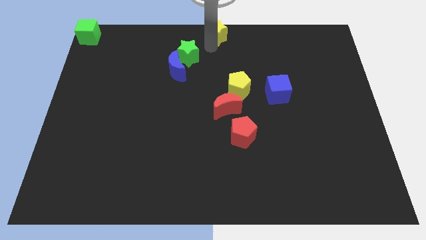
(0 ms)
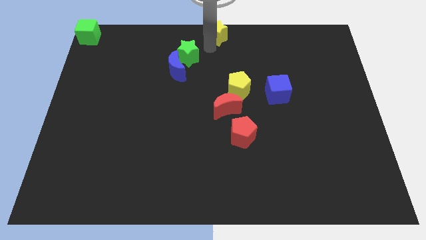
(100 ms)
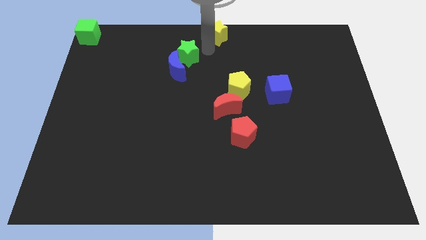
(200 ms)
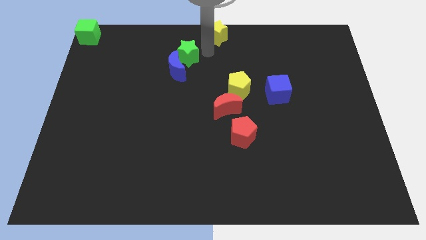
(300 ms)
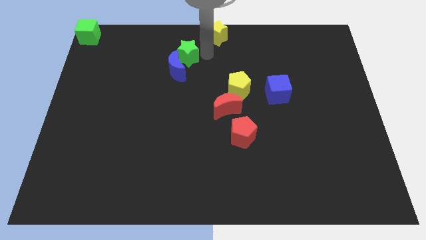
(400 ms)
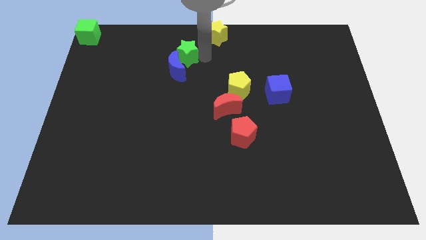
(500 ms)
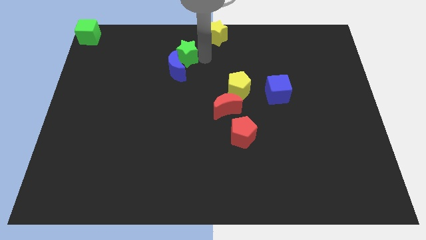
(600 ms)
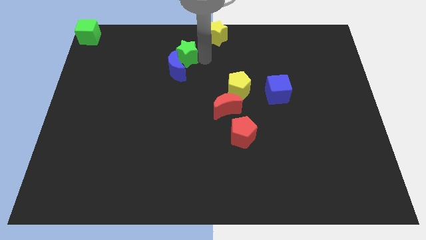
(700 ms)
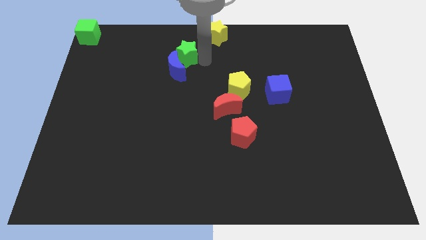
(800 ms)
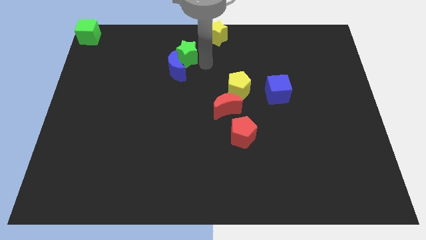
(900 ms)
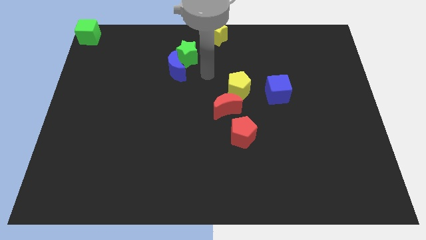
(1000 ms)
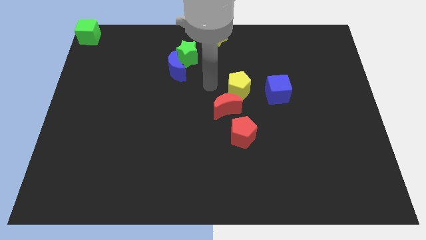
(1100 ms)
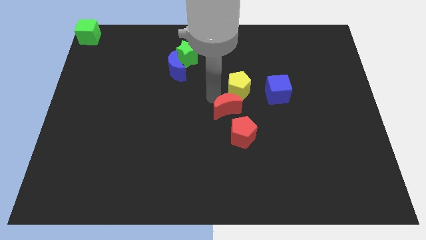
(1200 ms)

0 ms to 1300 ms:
slightly touch right to the green star

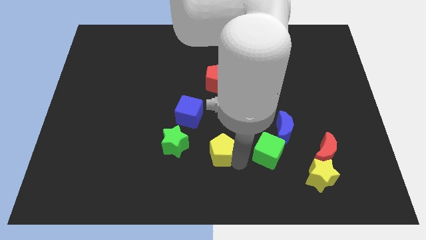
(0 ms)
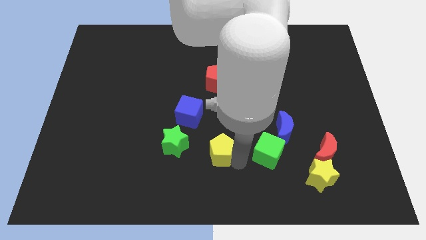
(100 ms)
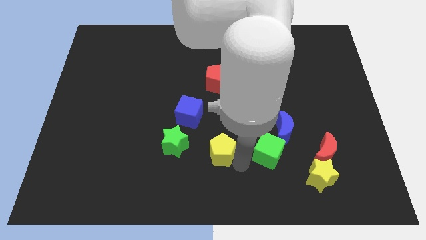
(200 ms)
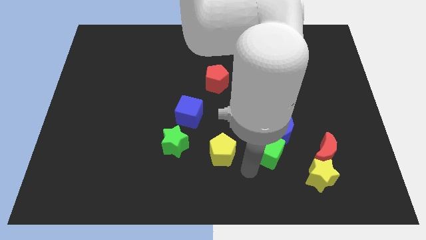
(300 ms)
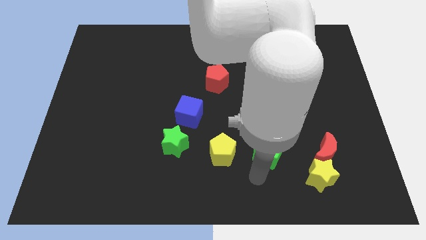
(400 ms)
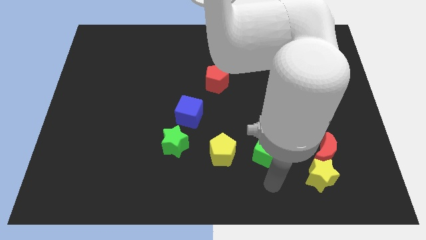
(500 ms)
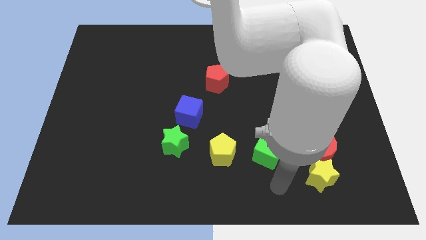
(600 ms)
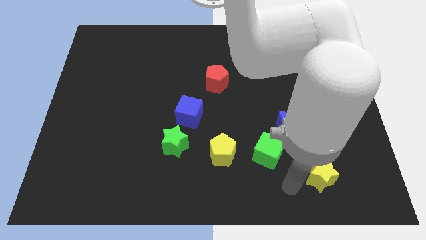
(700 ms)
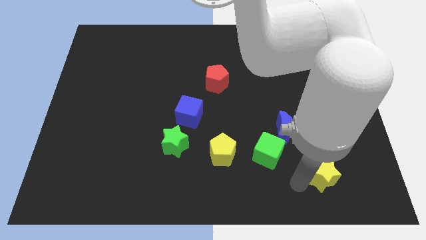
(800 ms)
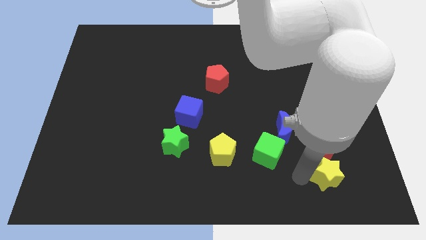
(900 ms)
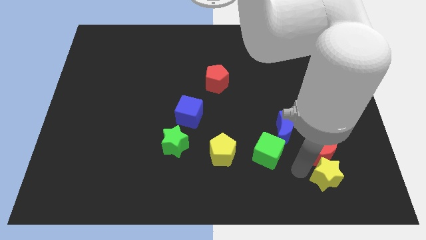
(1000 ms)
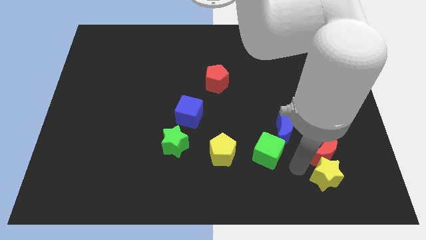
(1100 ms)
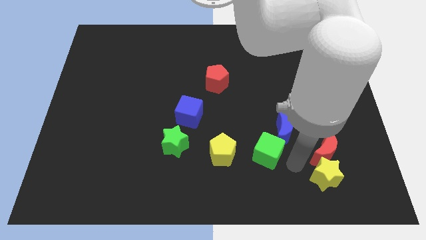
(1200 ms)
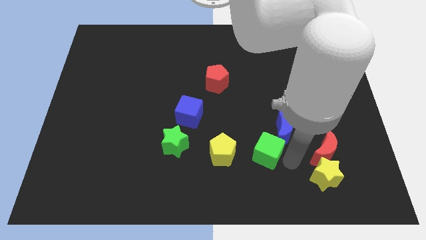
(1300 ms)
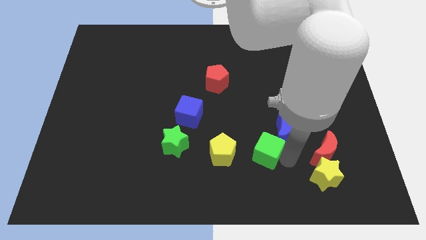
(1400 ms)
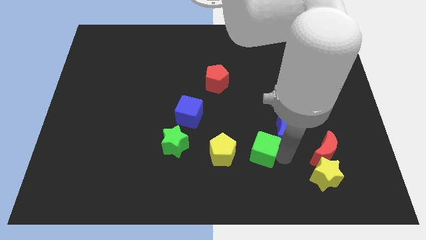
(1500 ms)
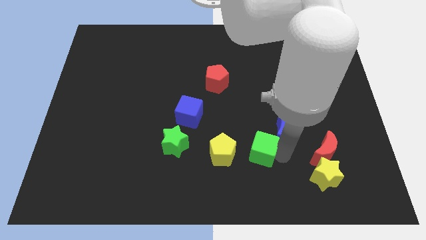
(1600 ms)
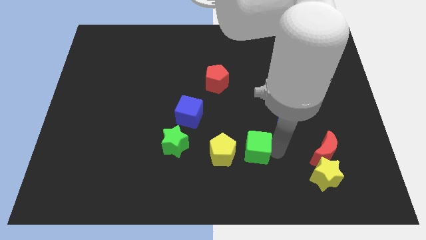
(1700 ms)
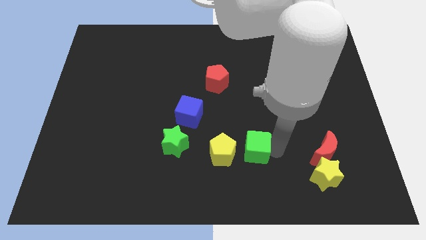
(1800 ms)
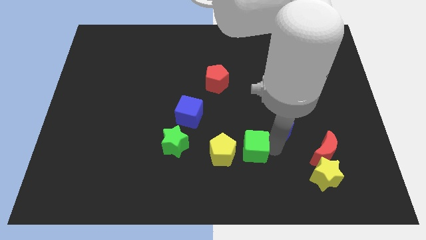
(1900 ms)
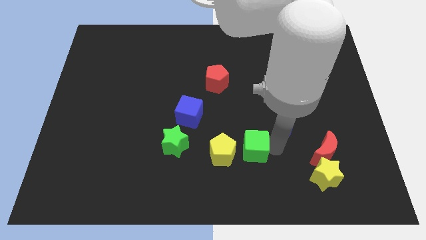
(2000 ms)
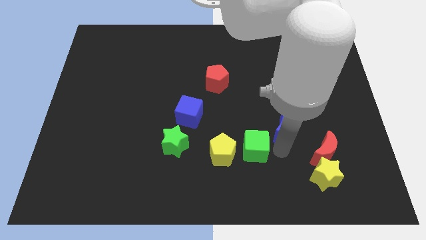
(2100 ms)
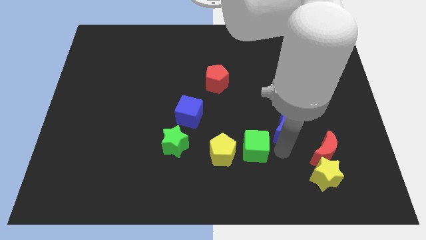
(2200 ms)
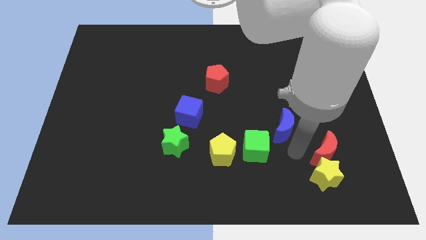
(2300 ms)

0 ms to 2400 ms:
slide the green cube to the right of yellow pentagon

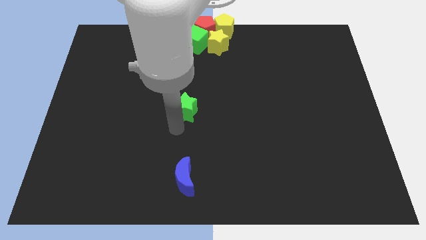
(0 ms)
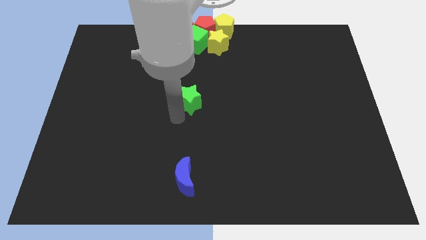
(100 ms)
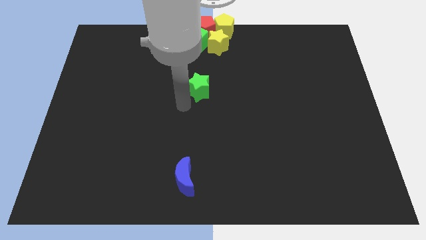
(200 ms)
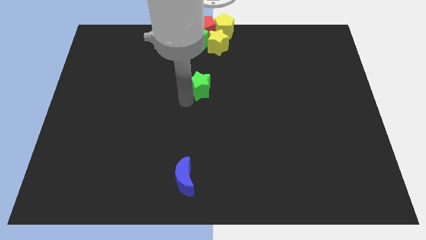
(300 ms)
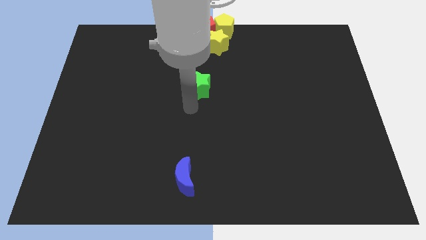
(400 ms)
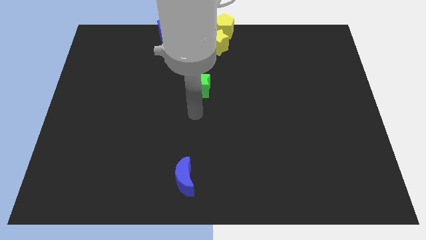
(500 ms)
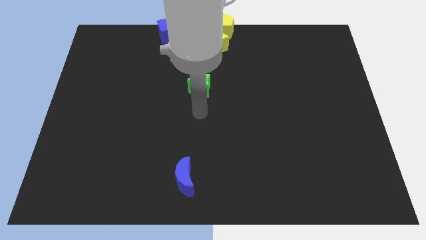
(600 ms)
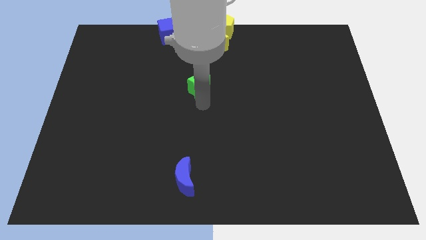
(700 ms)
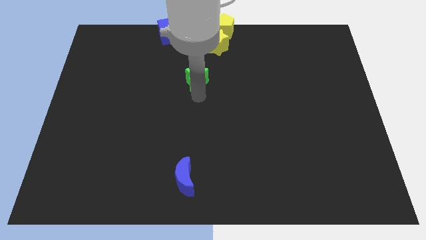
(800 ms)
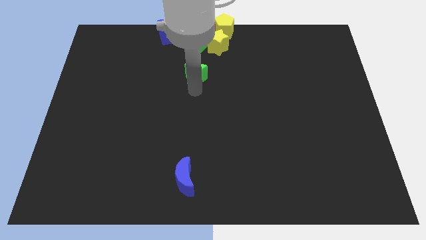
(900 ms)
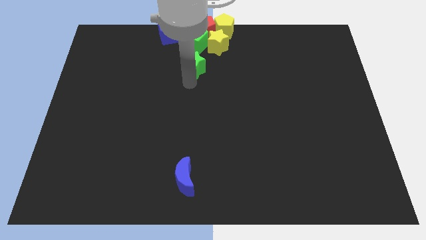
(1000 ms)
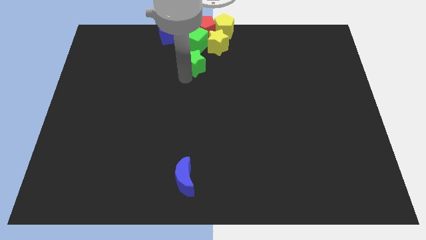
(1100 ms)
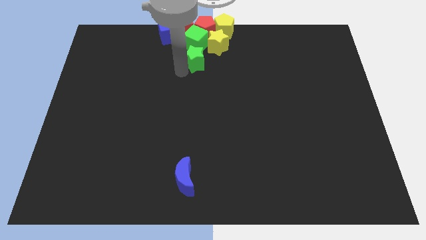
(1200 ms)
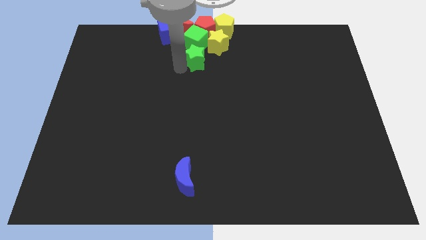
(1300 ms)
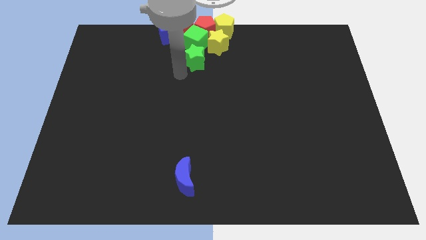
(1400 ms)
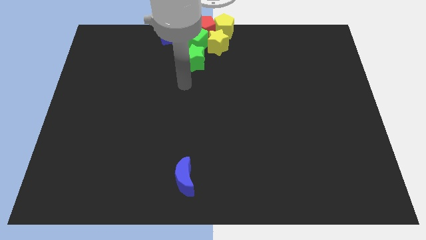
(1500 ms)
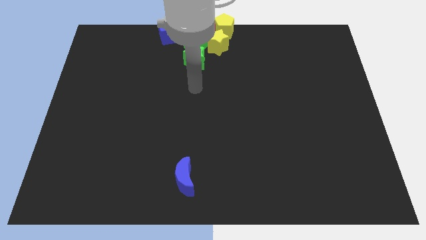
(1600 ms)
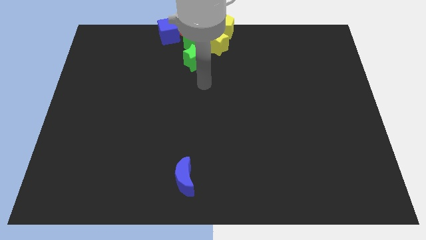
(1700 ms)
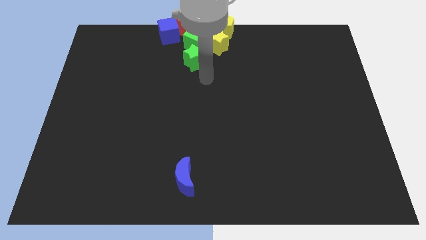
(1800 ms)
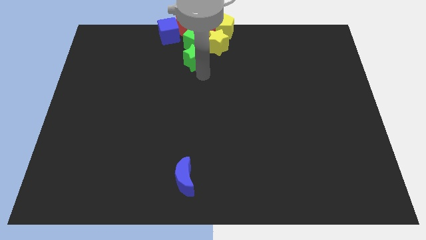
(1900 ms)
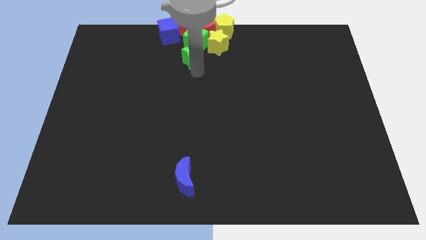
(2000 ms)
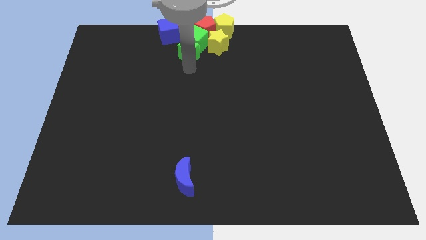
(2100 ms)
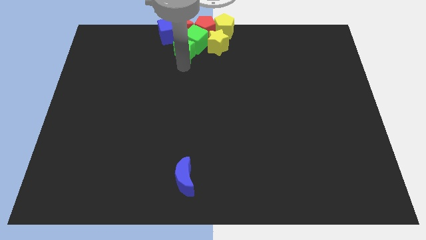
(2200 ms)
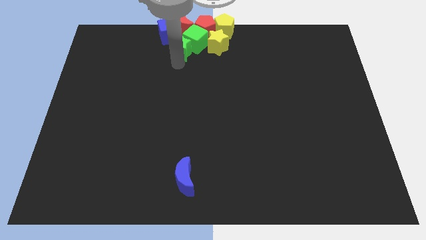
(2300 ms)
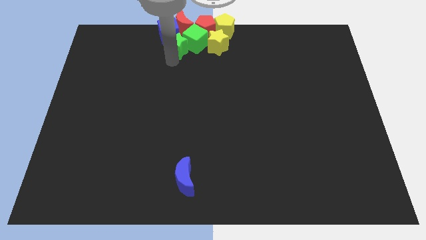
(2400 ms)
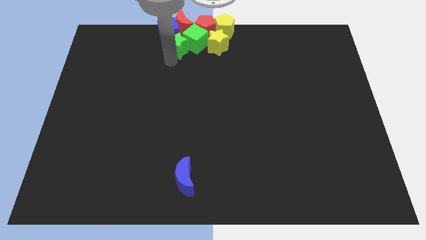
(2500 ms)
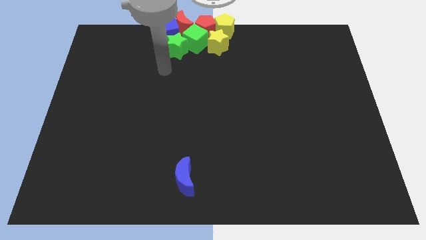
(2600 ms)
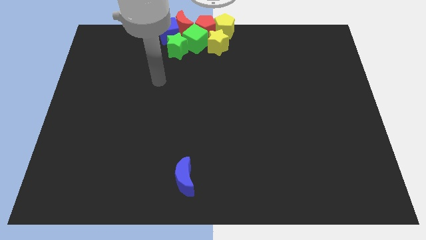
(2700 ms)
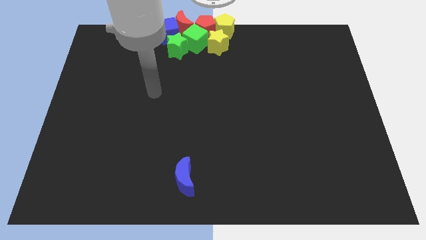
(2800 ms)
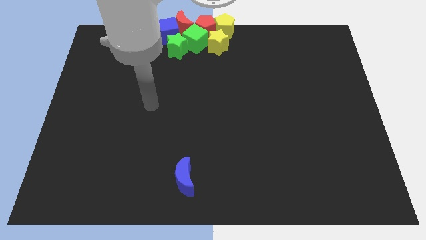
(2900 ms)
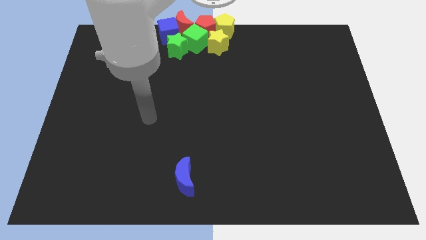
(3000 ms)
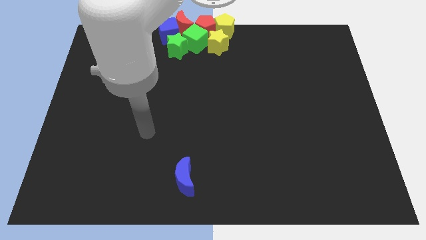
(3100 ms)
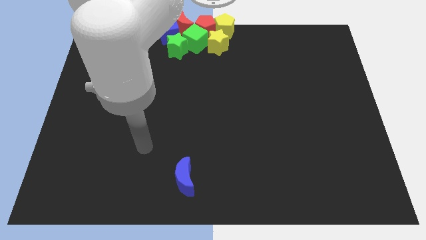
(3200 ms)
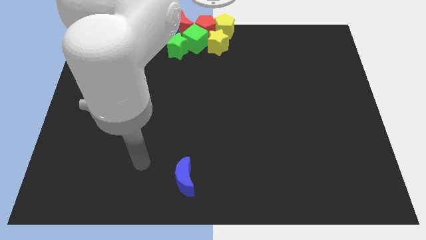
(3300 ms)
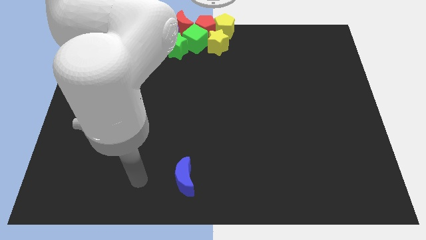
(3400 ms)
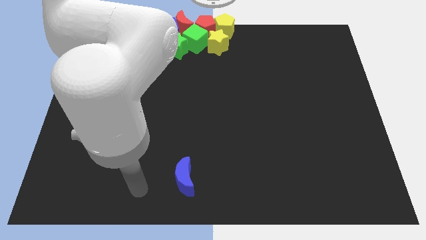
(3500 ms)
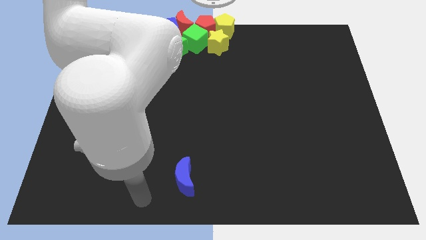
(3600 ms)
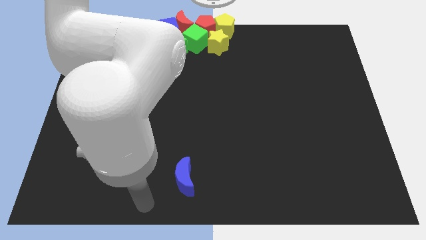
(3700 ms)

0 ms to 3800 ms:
push green star in to green cube

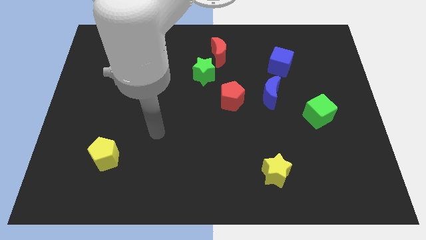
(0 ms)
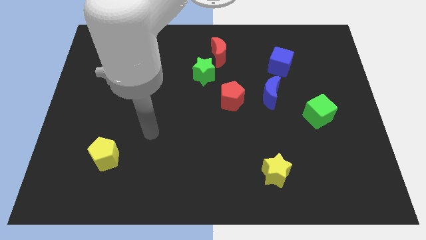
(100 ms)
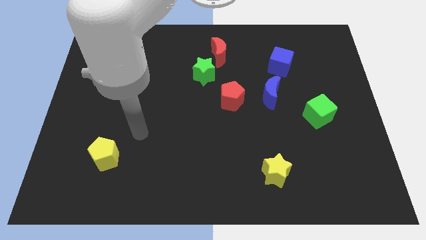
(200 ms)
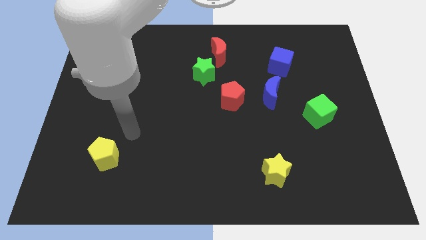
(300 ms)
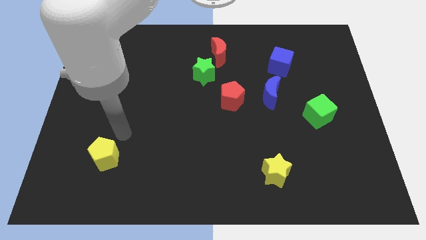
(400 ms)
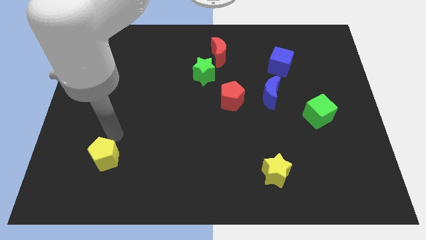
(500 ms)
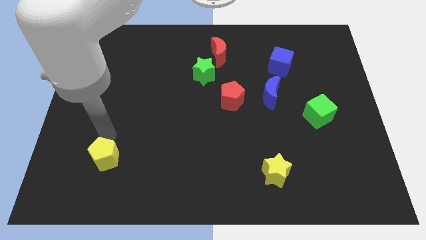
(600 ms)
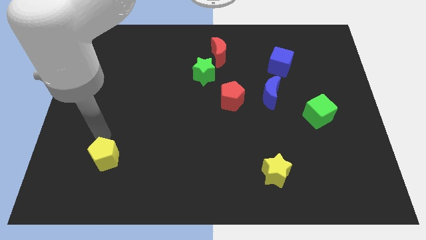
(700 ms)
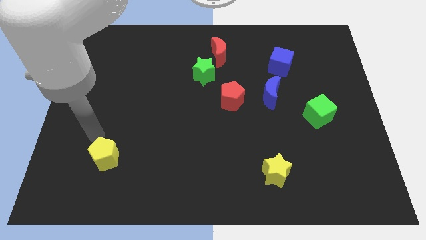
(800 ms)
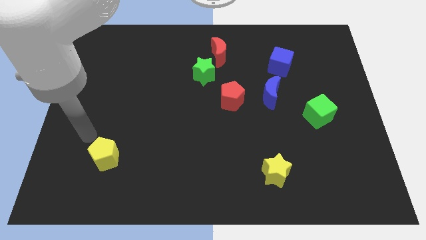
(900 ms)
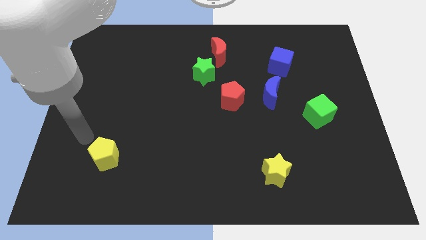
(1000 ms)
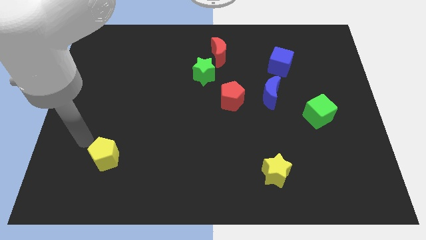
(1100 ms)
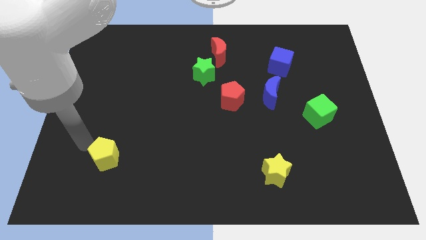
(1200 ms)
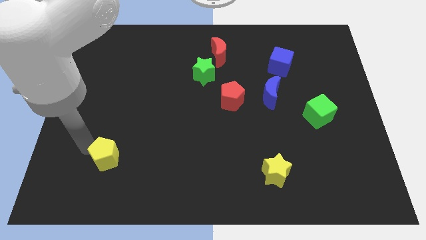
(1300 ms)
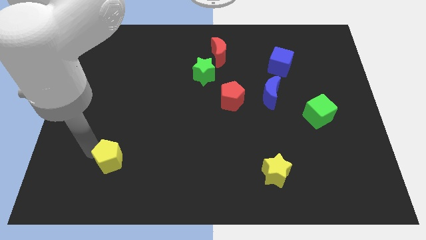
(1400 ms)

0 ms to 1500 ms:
tap the yellow pentagon
